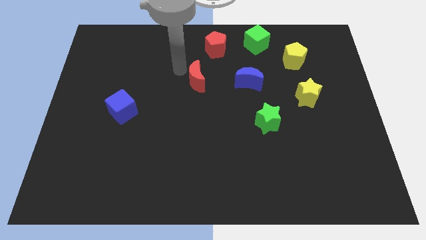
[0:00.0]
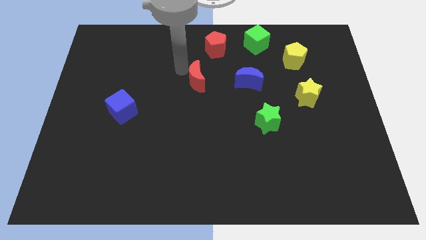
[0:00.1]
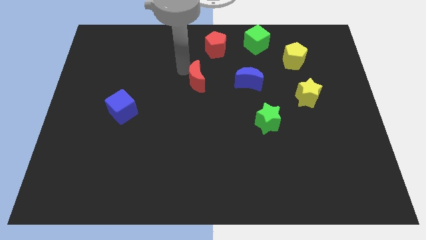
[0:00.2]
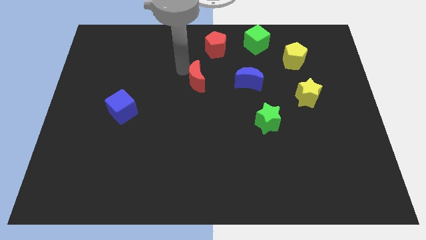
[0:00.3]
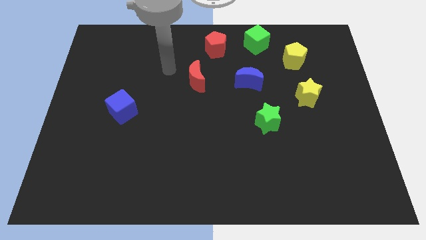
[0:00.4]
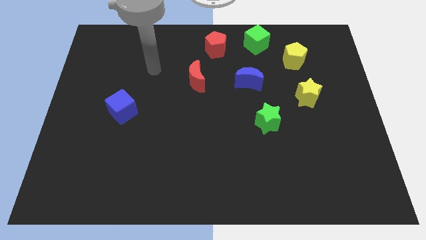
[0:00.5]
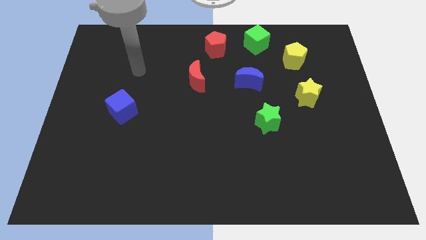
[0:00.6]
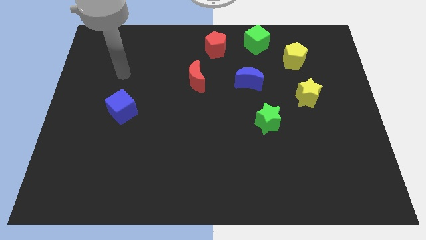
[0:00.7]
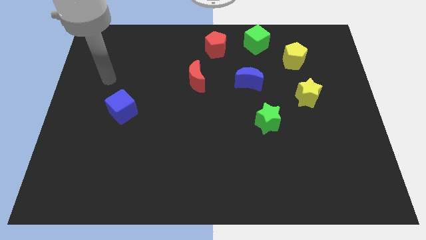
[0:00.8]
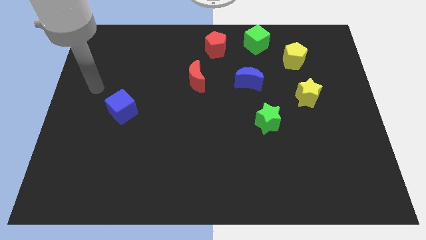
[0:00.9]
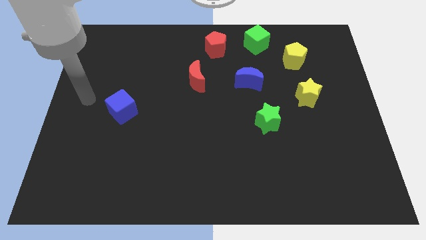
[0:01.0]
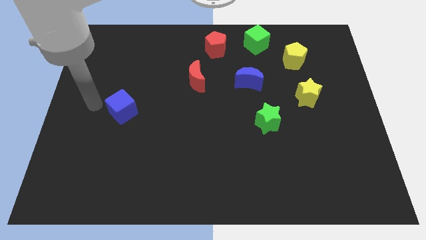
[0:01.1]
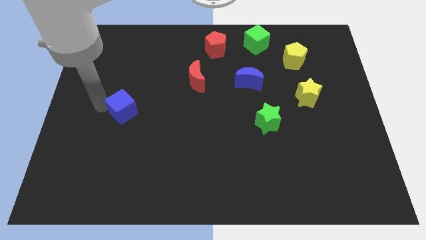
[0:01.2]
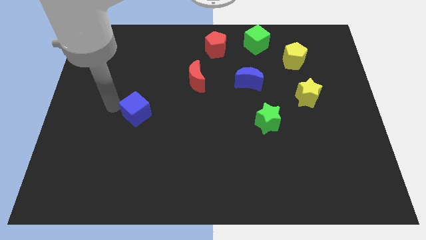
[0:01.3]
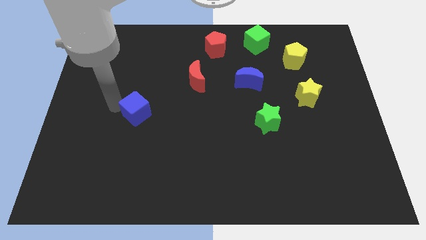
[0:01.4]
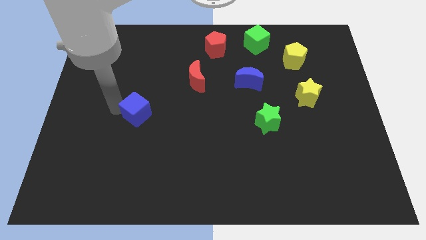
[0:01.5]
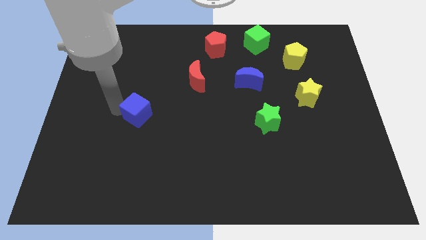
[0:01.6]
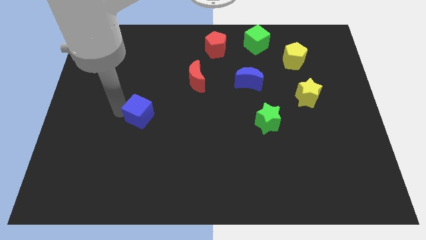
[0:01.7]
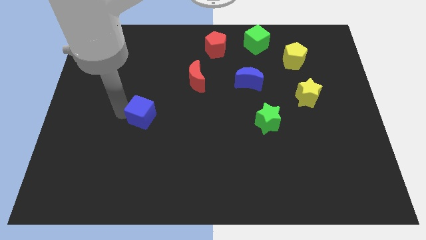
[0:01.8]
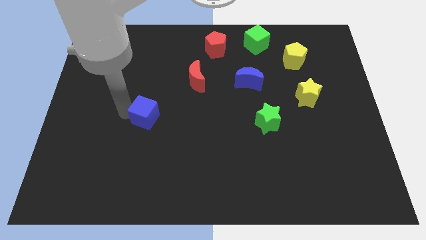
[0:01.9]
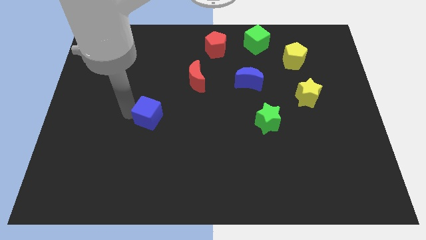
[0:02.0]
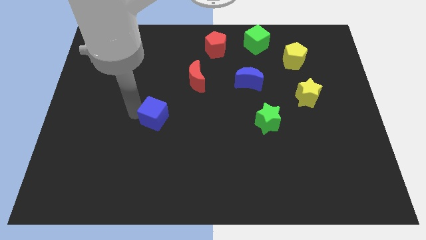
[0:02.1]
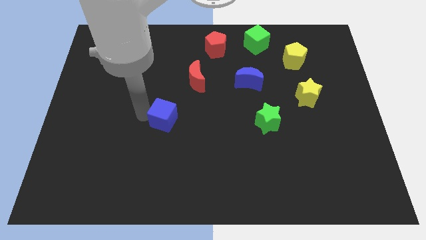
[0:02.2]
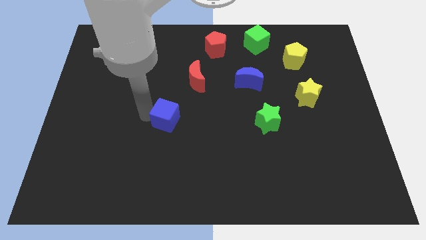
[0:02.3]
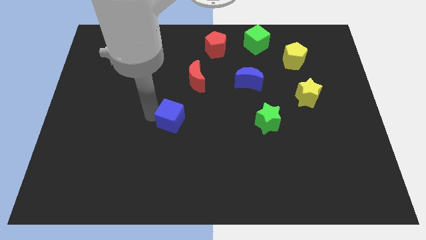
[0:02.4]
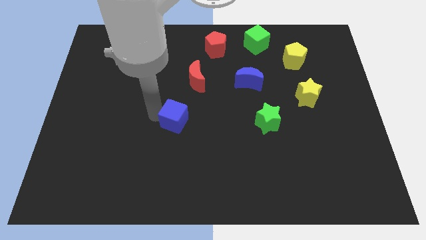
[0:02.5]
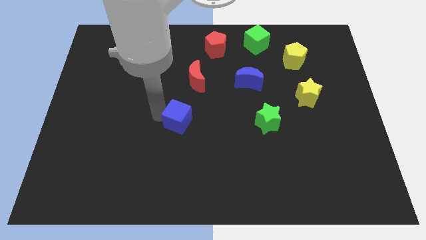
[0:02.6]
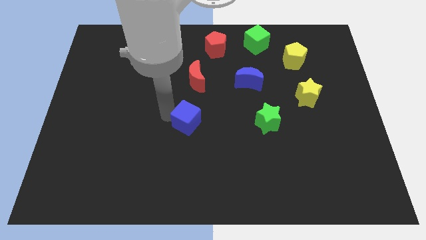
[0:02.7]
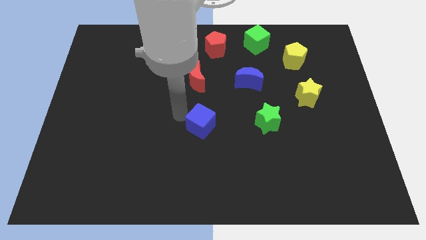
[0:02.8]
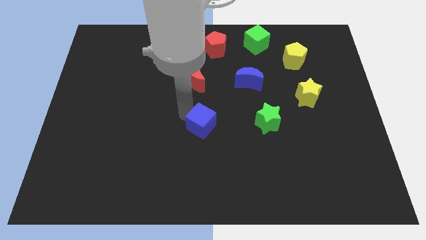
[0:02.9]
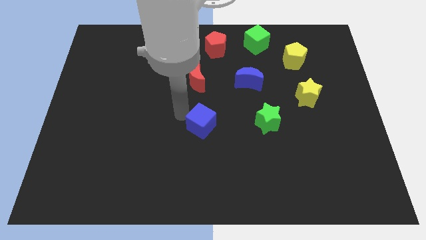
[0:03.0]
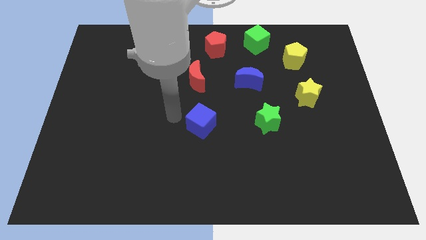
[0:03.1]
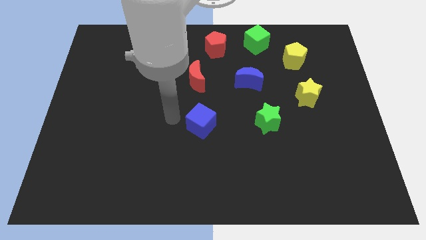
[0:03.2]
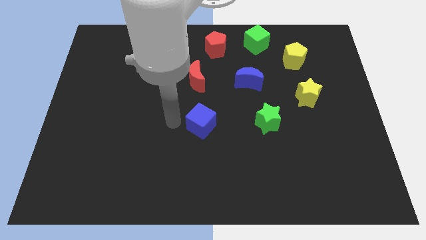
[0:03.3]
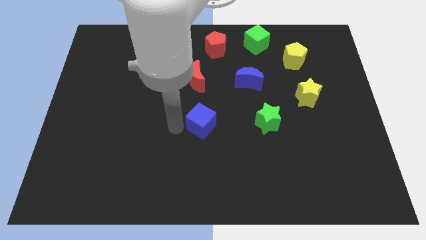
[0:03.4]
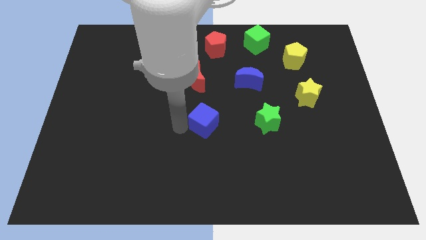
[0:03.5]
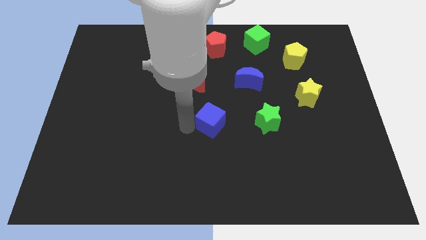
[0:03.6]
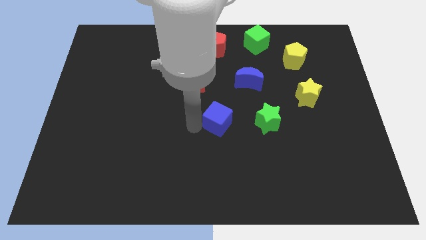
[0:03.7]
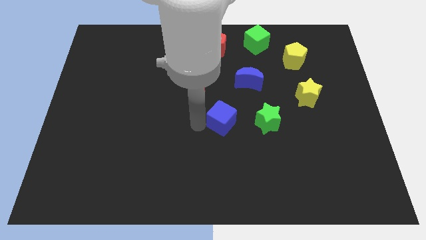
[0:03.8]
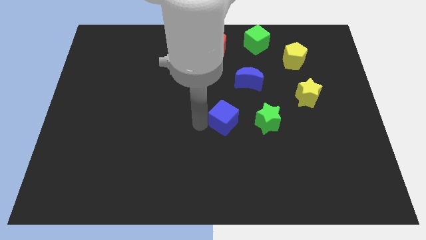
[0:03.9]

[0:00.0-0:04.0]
drag the blue cube to the towards the left side of the green star

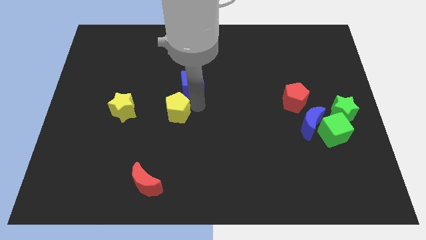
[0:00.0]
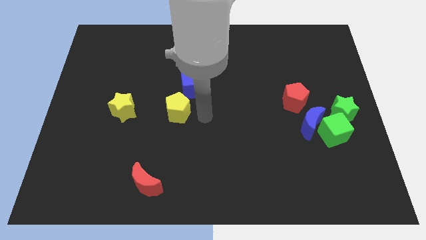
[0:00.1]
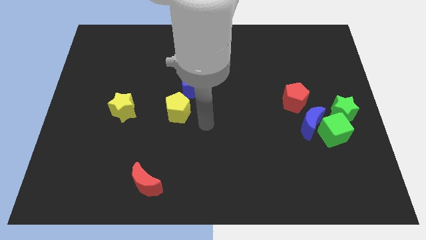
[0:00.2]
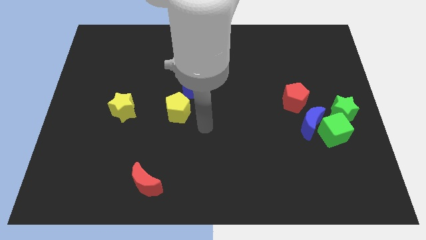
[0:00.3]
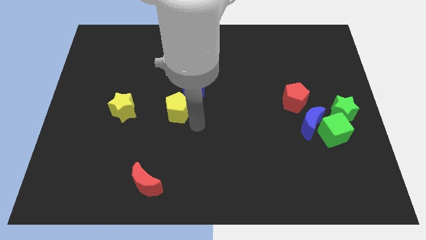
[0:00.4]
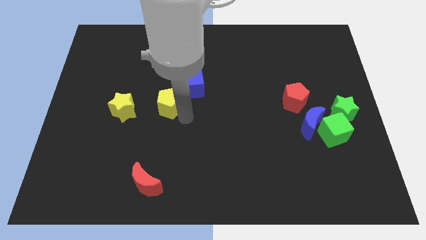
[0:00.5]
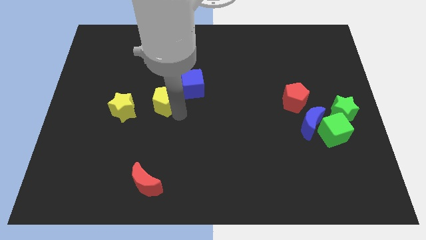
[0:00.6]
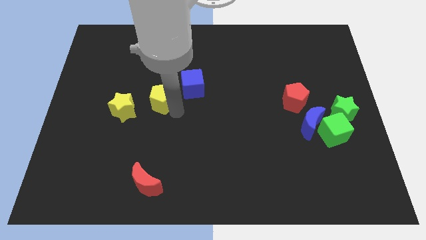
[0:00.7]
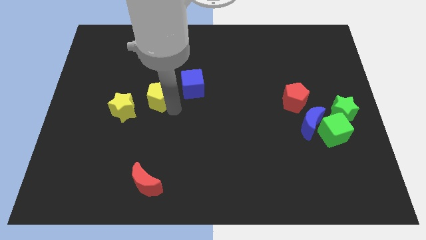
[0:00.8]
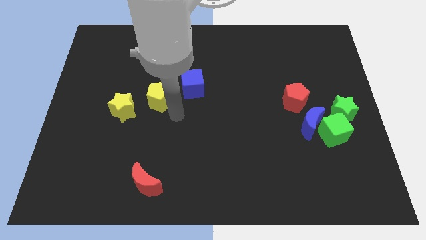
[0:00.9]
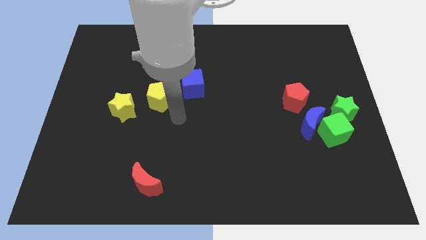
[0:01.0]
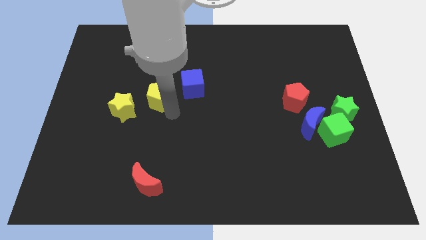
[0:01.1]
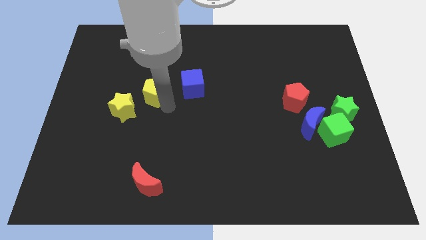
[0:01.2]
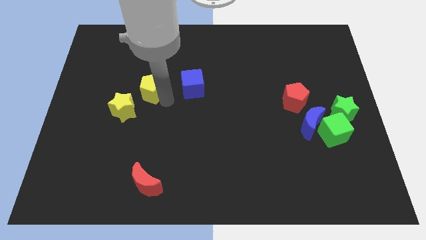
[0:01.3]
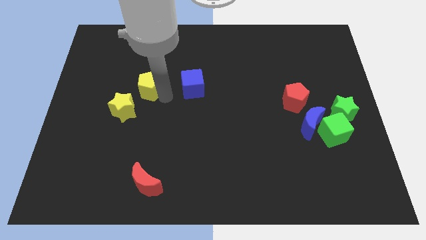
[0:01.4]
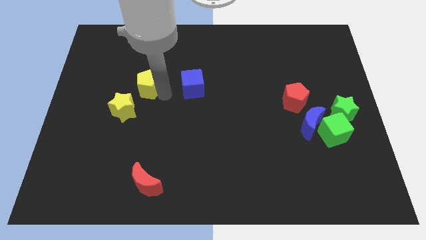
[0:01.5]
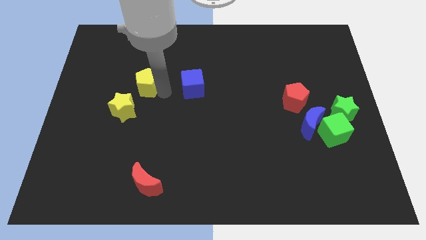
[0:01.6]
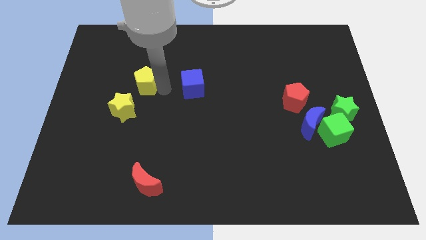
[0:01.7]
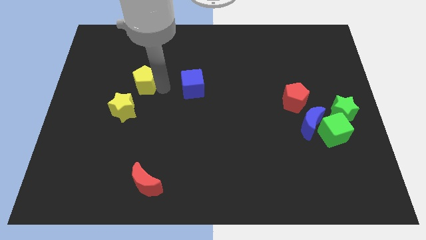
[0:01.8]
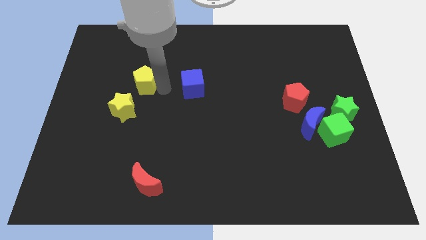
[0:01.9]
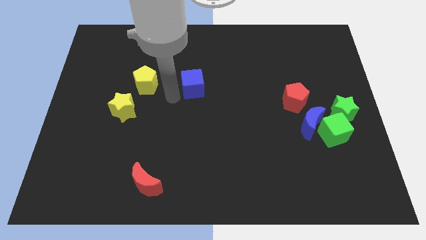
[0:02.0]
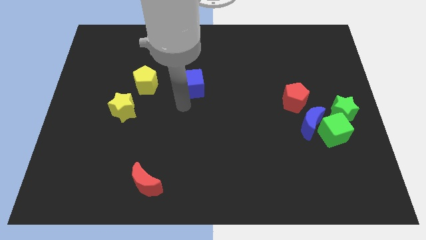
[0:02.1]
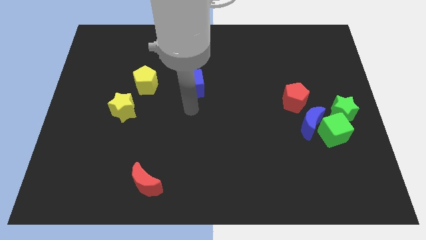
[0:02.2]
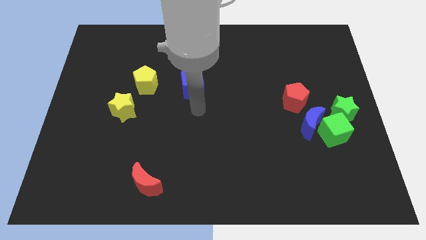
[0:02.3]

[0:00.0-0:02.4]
move the yellow pentagon to the top right of the yellow star

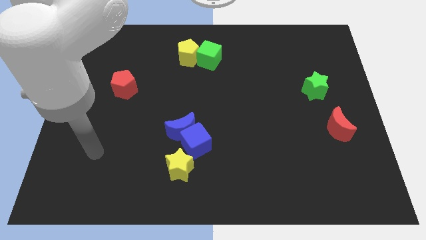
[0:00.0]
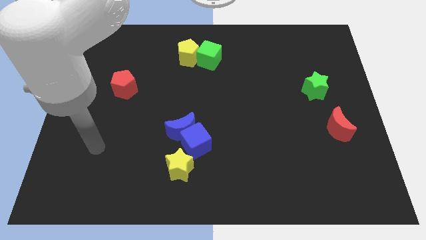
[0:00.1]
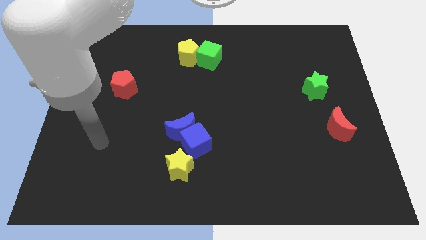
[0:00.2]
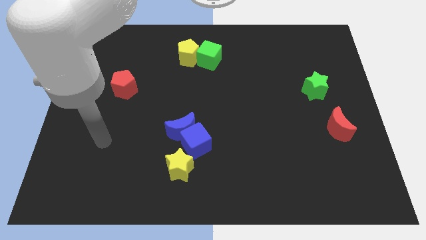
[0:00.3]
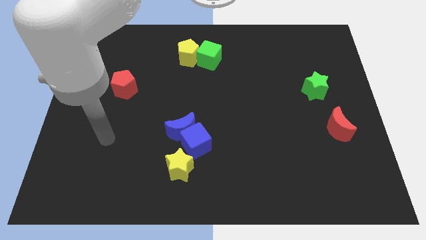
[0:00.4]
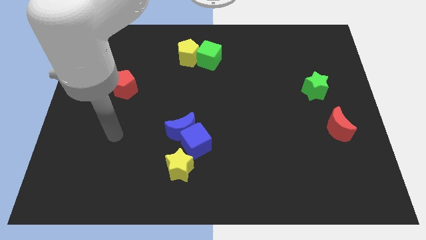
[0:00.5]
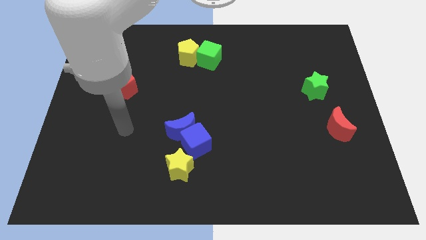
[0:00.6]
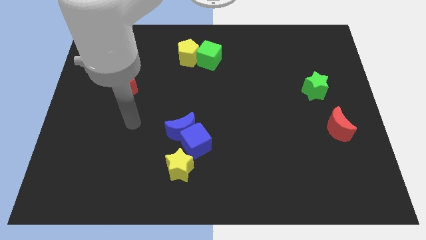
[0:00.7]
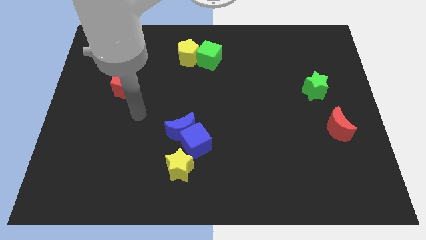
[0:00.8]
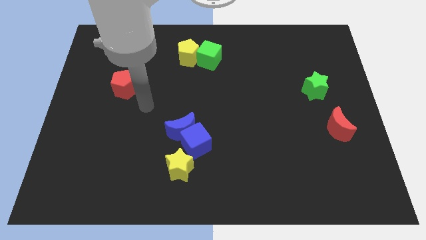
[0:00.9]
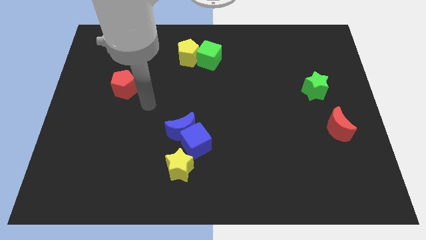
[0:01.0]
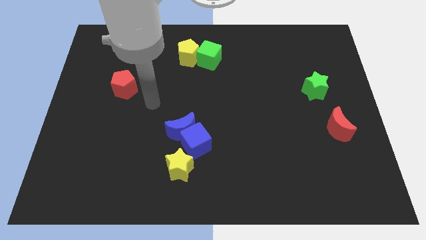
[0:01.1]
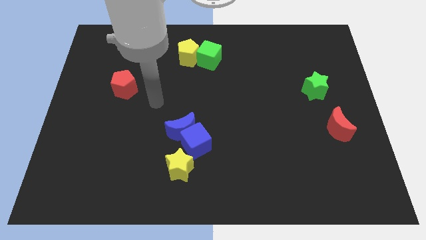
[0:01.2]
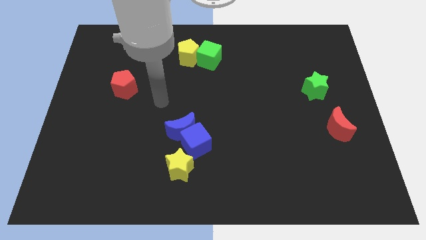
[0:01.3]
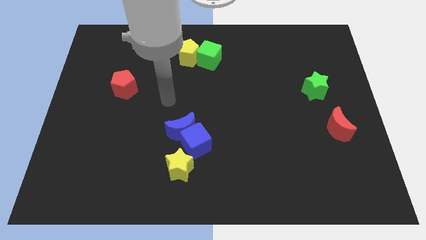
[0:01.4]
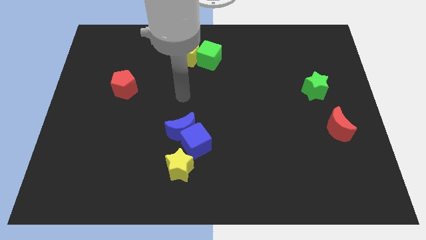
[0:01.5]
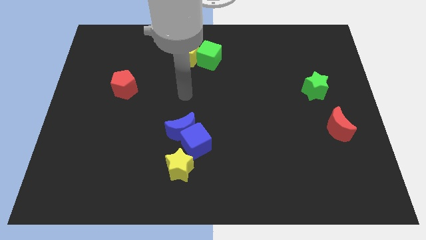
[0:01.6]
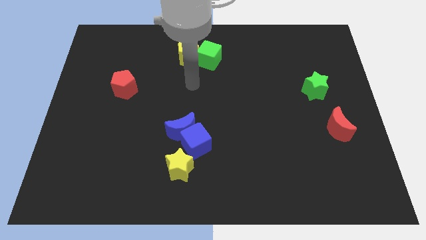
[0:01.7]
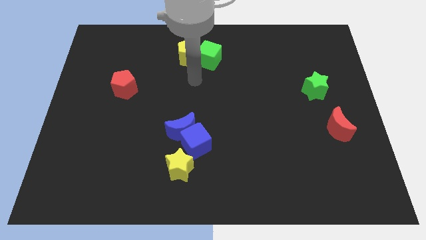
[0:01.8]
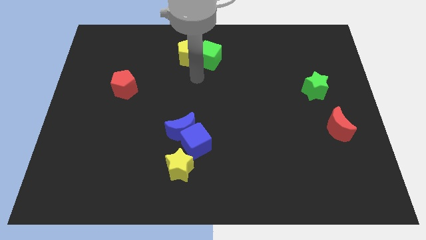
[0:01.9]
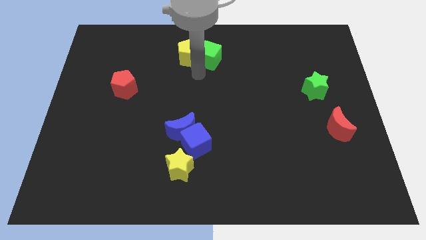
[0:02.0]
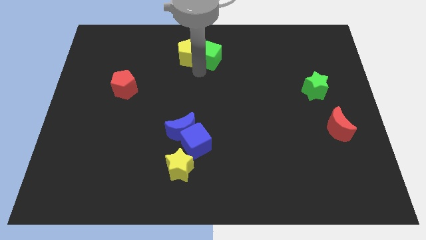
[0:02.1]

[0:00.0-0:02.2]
point your hand below the green cube

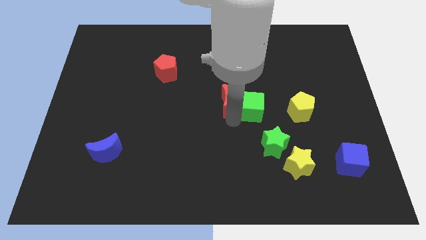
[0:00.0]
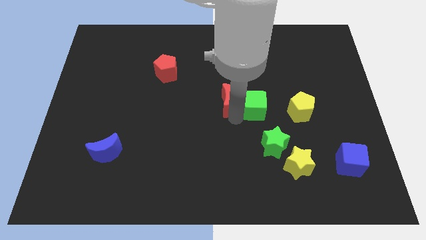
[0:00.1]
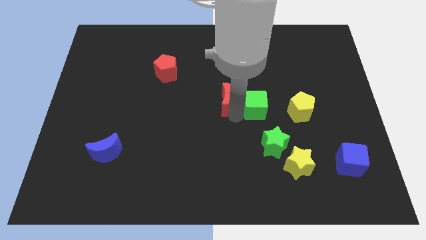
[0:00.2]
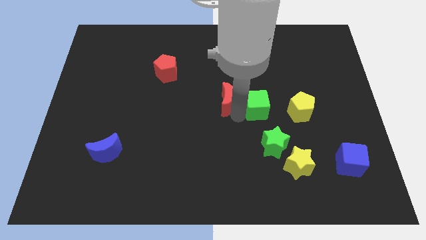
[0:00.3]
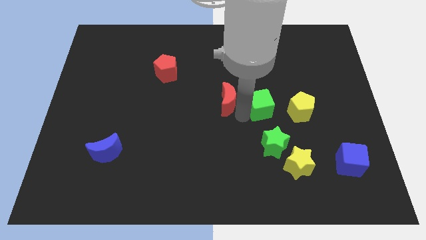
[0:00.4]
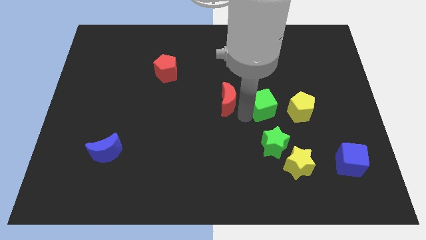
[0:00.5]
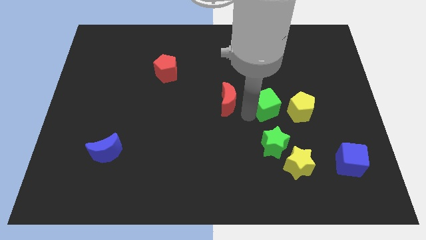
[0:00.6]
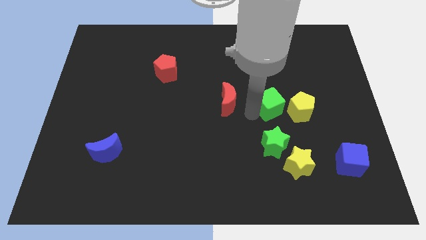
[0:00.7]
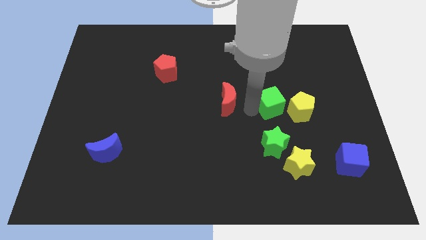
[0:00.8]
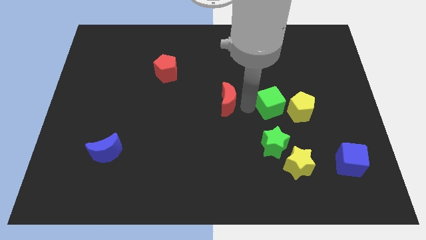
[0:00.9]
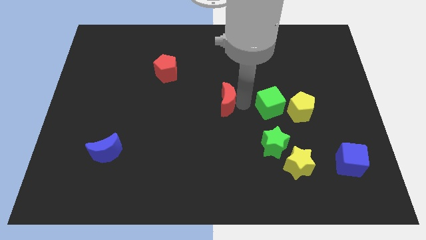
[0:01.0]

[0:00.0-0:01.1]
push the green cube to the left of the yellow pentagon
